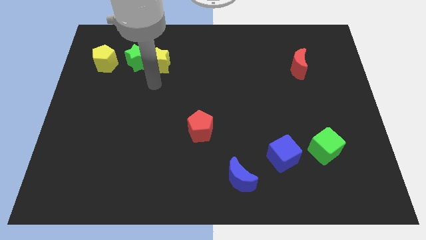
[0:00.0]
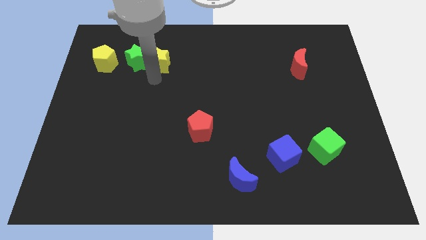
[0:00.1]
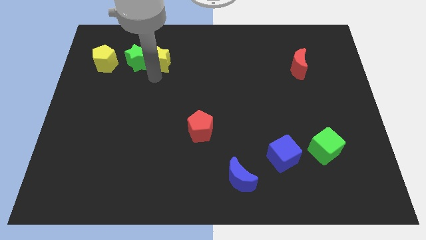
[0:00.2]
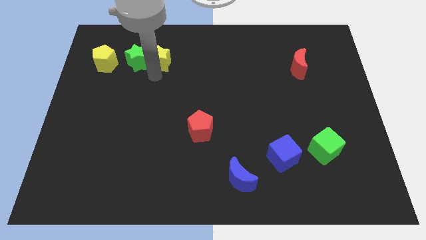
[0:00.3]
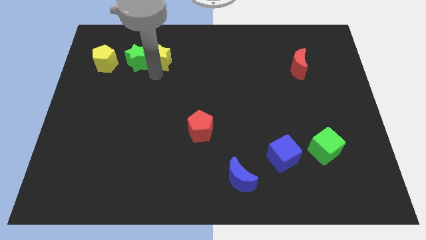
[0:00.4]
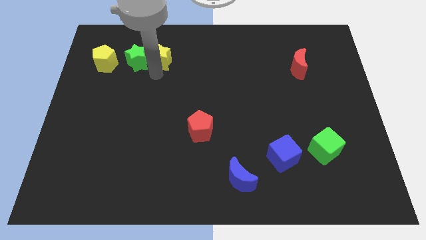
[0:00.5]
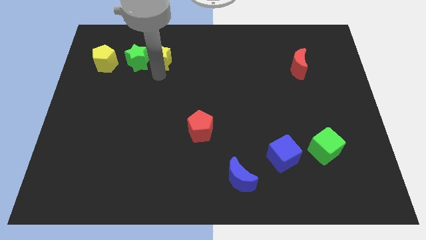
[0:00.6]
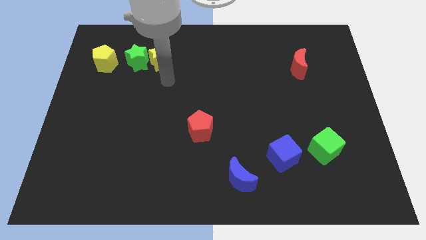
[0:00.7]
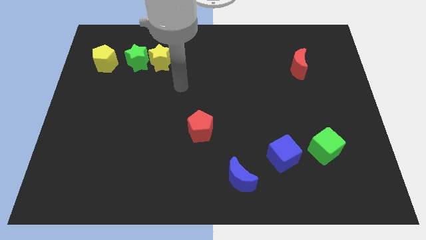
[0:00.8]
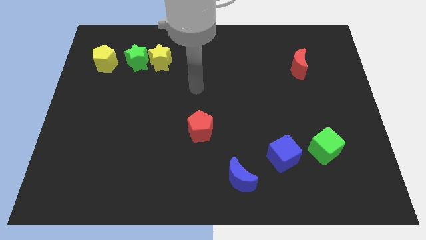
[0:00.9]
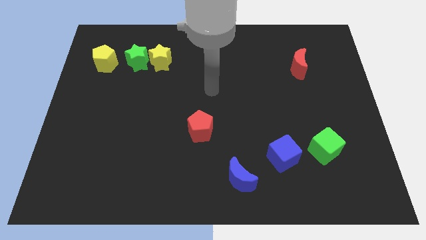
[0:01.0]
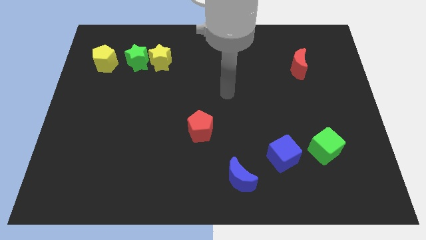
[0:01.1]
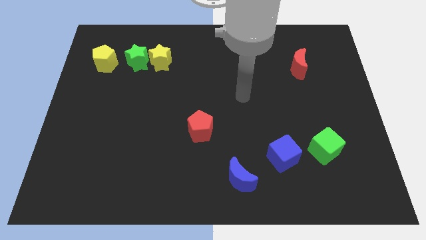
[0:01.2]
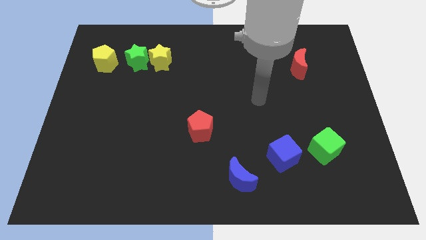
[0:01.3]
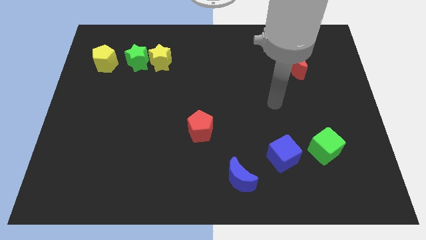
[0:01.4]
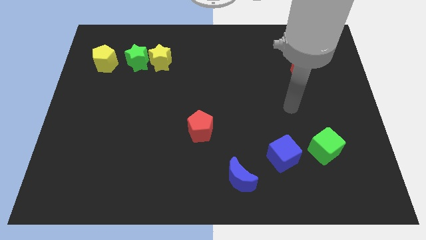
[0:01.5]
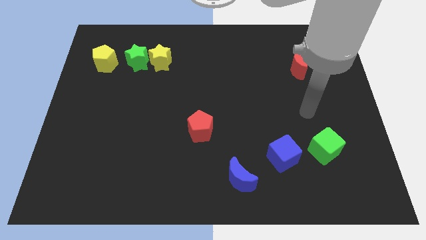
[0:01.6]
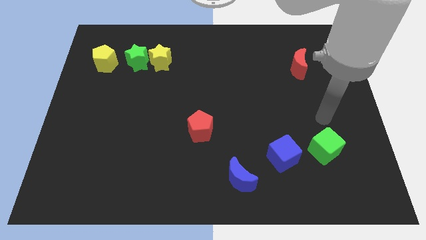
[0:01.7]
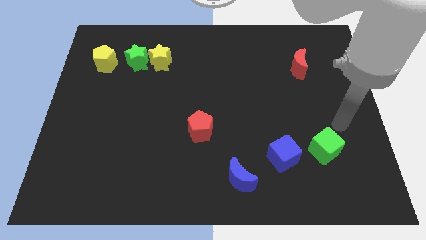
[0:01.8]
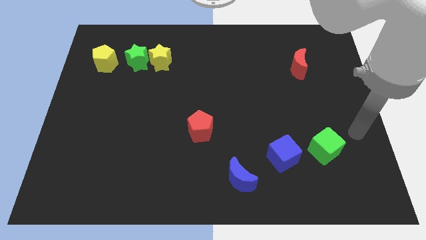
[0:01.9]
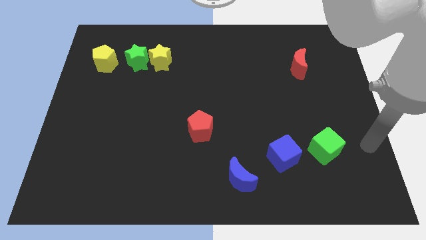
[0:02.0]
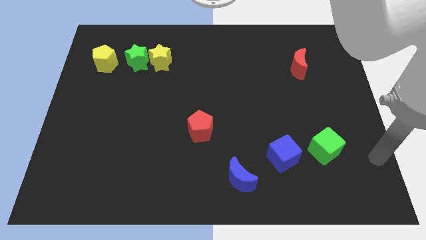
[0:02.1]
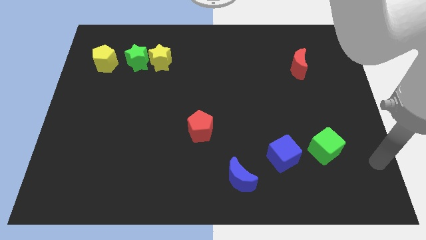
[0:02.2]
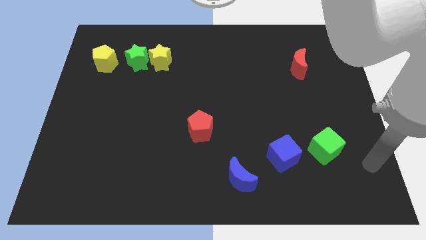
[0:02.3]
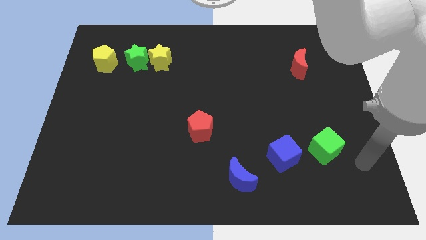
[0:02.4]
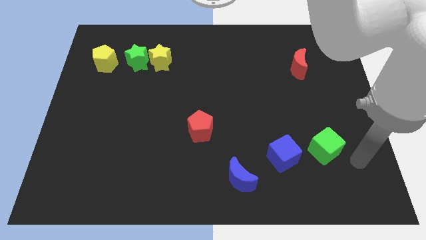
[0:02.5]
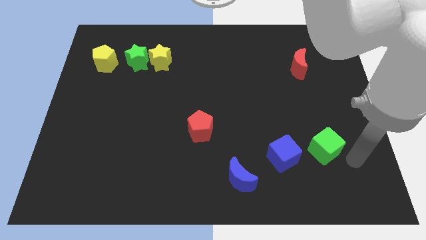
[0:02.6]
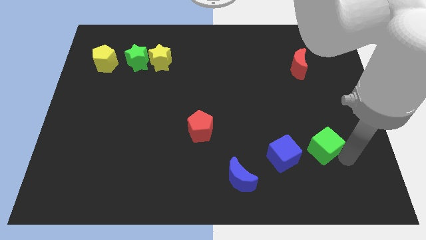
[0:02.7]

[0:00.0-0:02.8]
move your arm away from the yellow star

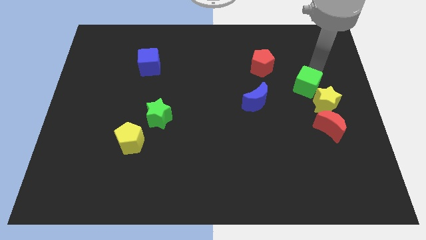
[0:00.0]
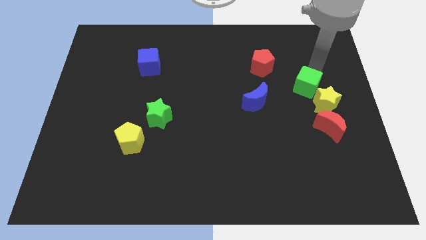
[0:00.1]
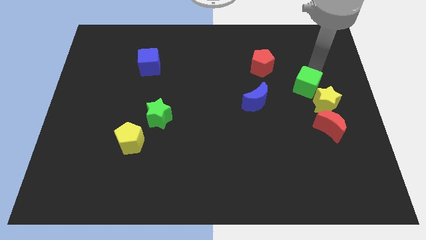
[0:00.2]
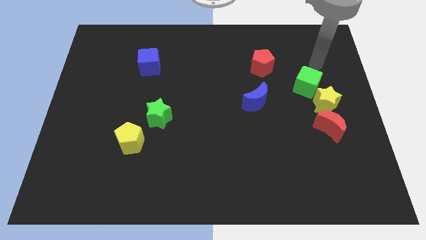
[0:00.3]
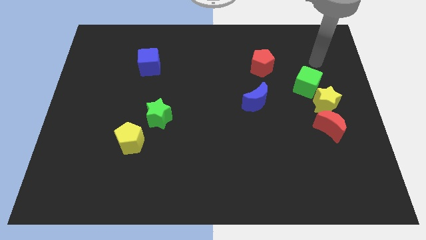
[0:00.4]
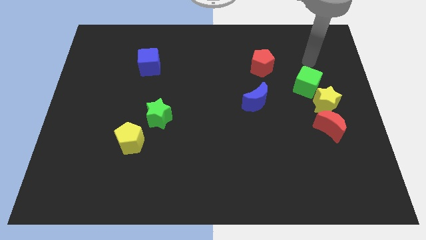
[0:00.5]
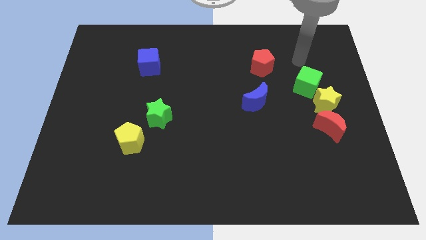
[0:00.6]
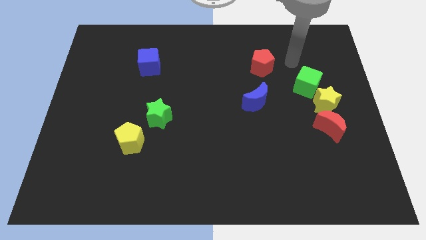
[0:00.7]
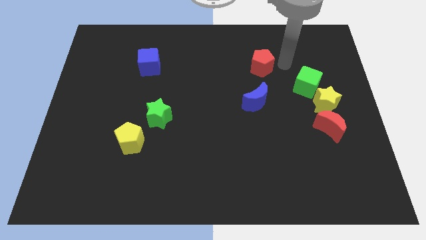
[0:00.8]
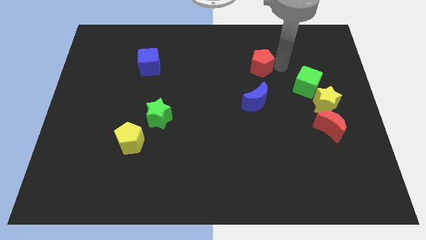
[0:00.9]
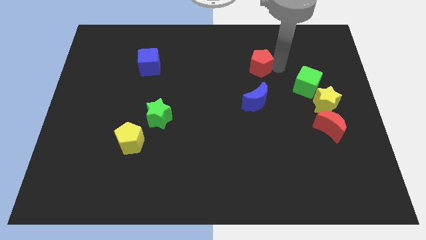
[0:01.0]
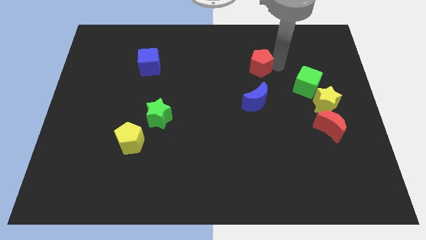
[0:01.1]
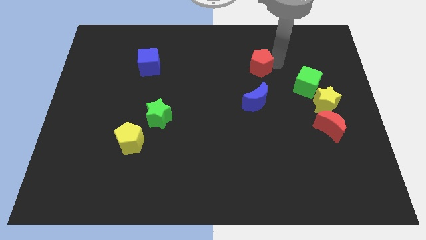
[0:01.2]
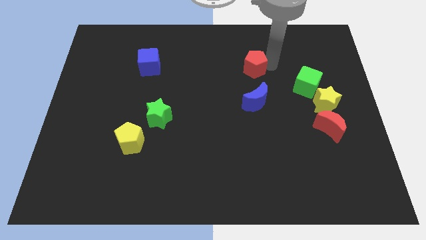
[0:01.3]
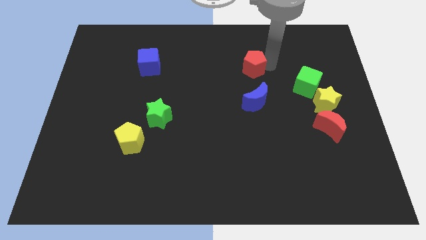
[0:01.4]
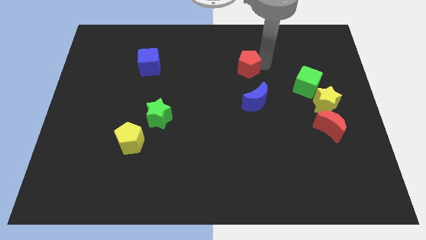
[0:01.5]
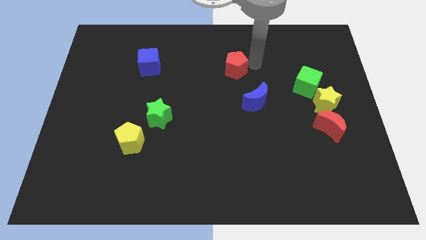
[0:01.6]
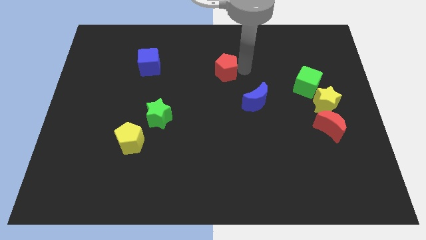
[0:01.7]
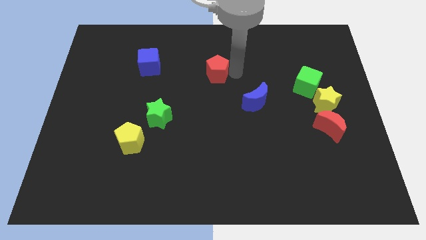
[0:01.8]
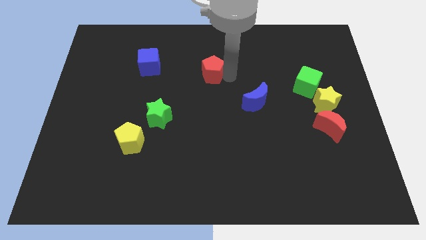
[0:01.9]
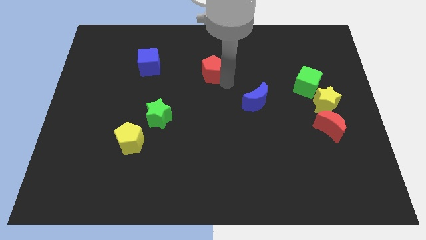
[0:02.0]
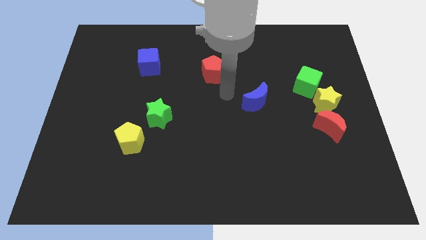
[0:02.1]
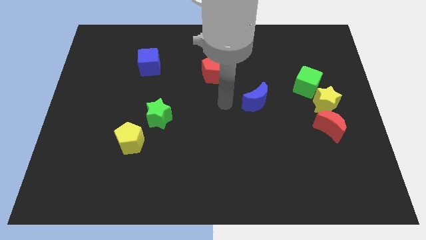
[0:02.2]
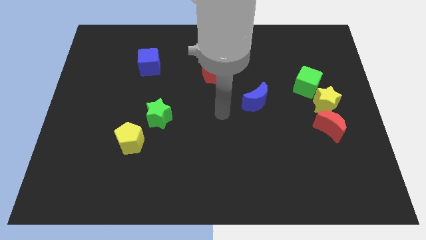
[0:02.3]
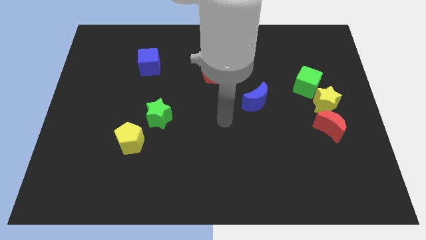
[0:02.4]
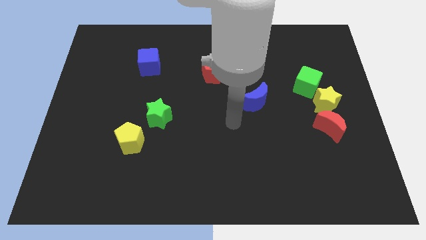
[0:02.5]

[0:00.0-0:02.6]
move your arm away from the green cube

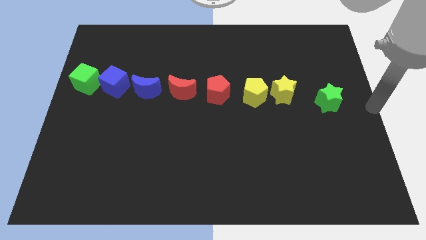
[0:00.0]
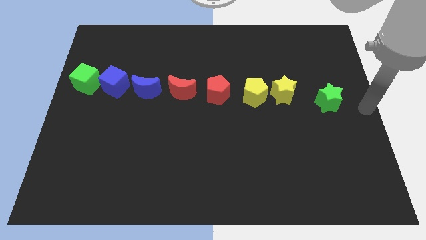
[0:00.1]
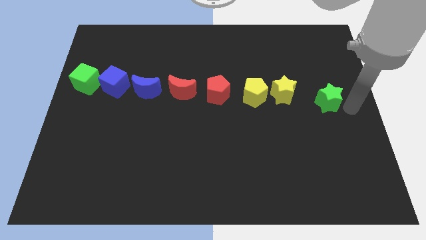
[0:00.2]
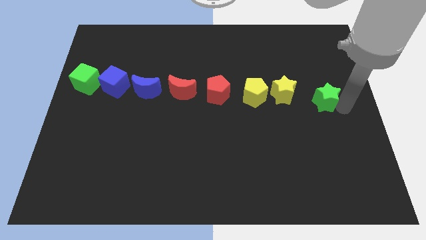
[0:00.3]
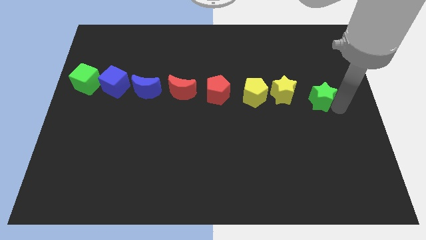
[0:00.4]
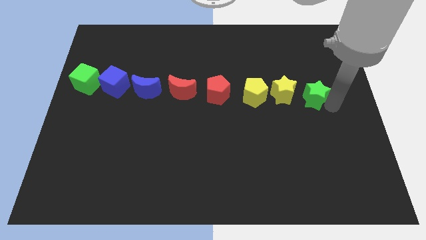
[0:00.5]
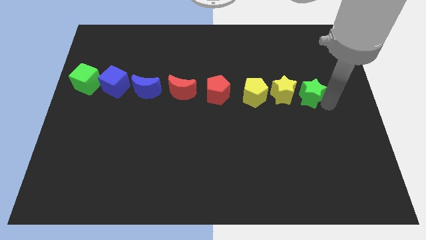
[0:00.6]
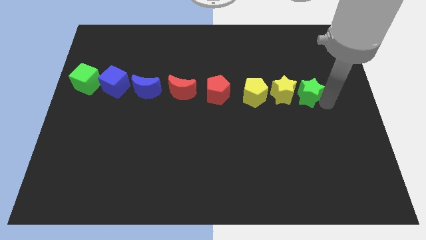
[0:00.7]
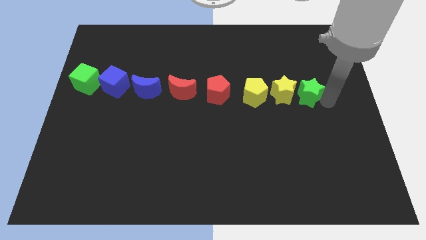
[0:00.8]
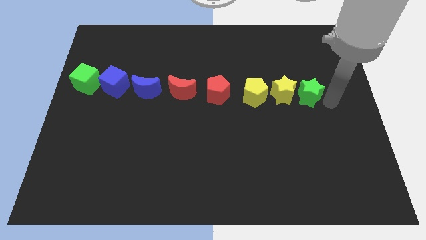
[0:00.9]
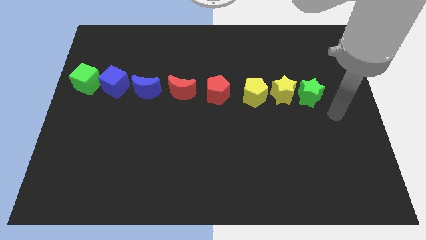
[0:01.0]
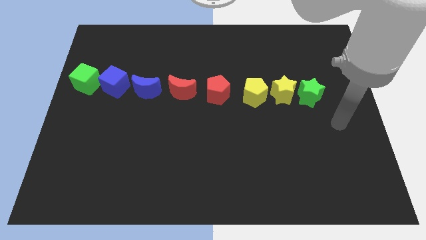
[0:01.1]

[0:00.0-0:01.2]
push the green star to the right of the yellow star to form a horizontal line

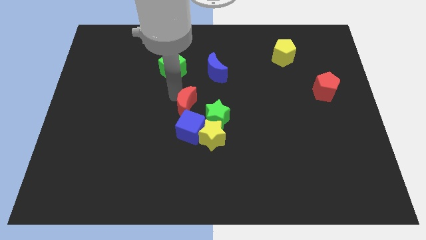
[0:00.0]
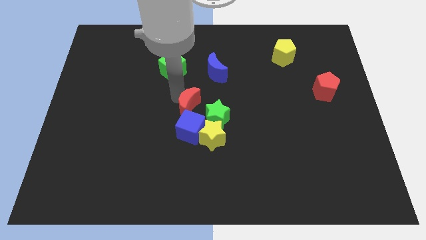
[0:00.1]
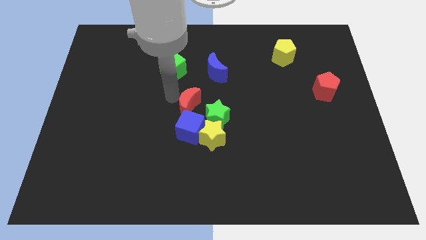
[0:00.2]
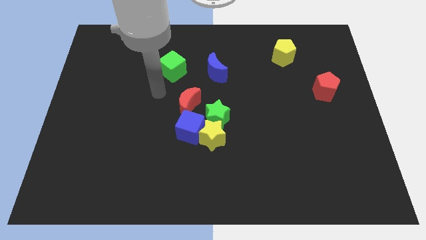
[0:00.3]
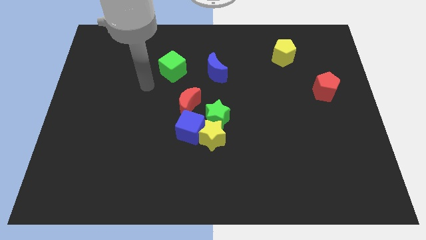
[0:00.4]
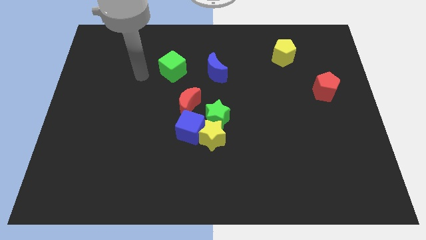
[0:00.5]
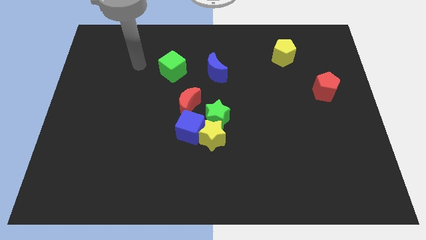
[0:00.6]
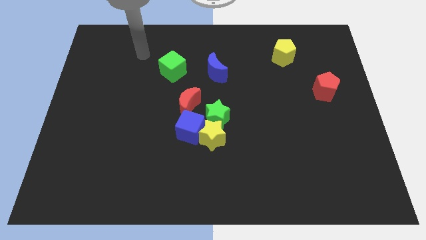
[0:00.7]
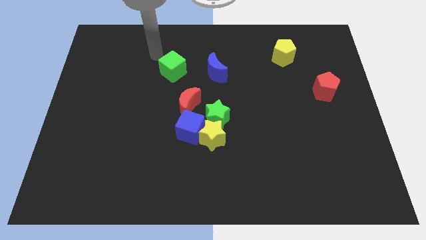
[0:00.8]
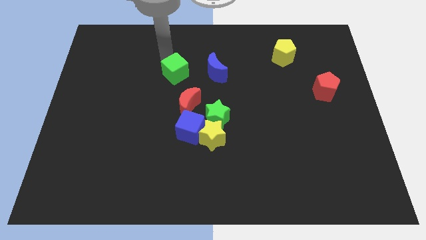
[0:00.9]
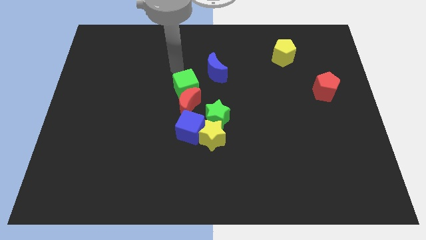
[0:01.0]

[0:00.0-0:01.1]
place the green cube to the top of the red crescent

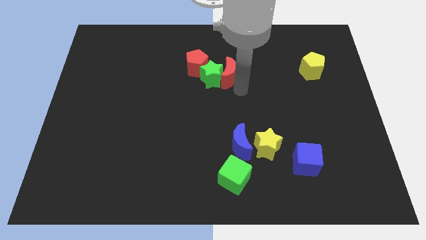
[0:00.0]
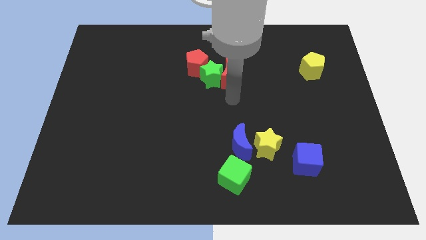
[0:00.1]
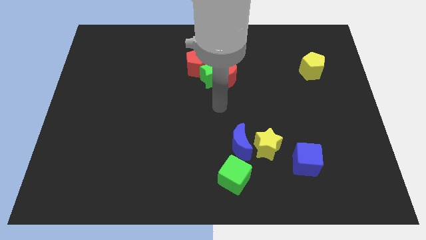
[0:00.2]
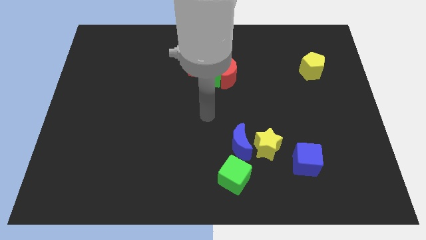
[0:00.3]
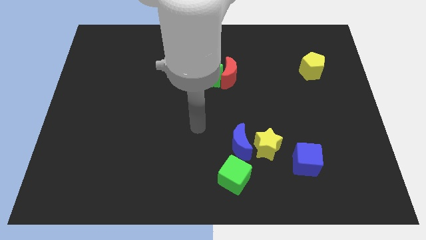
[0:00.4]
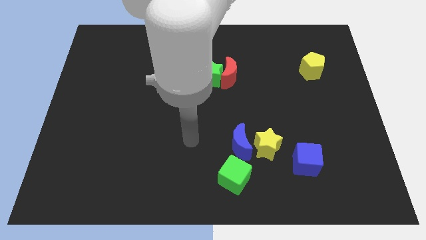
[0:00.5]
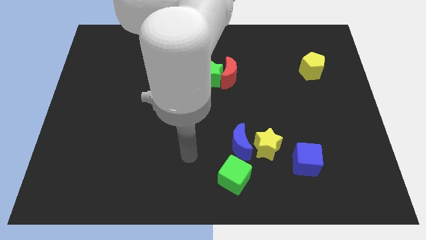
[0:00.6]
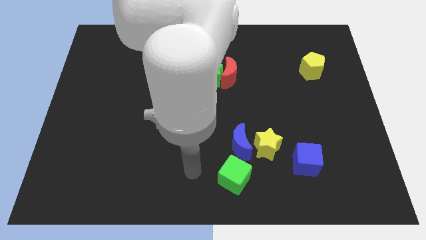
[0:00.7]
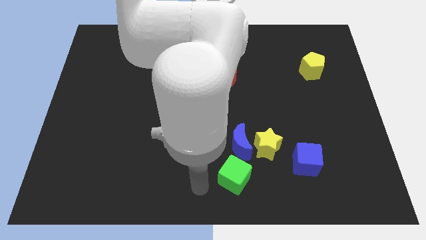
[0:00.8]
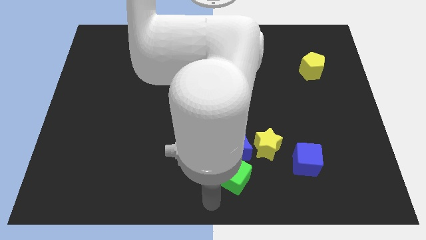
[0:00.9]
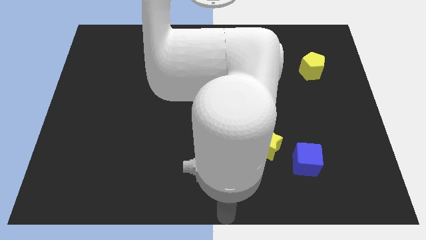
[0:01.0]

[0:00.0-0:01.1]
move the arm towards the green cube
